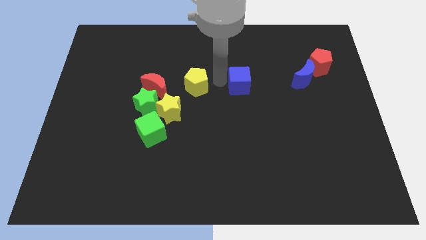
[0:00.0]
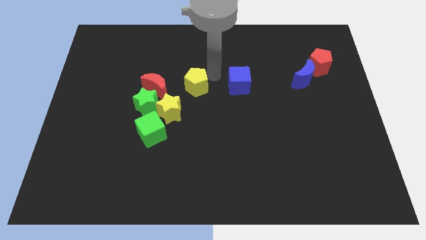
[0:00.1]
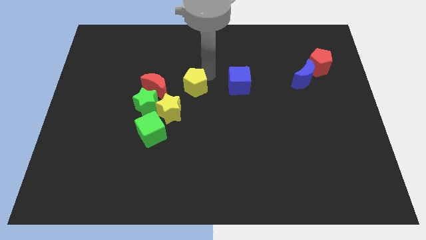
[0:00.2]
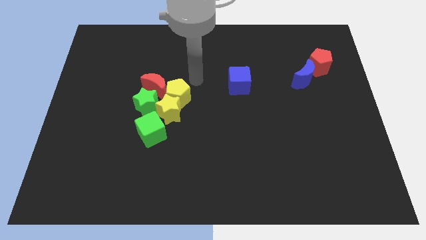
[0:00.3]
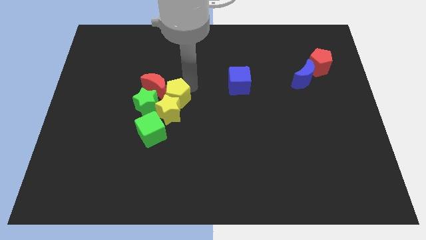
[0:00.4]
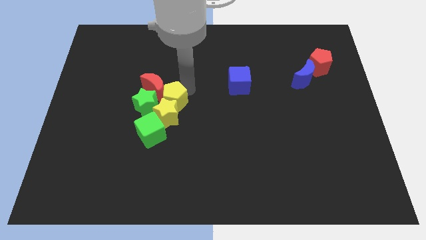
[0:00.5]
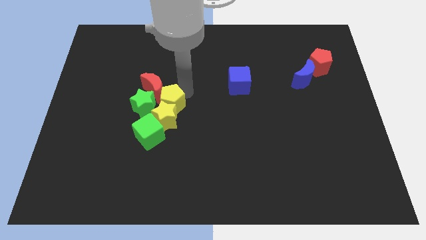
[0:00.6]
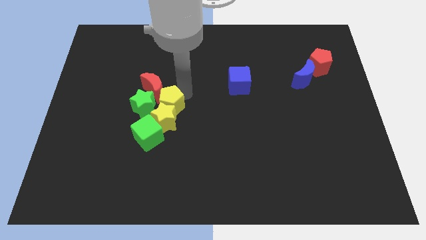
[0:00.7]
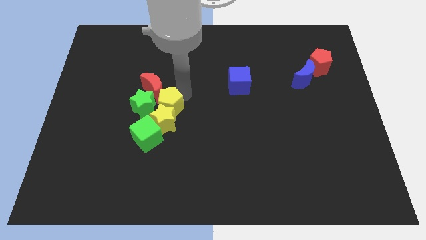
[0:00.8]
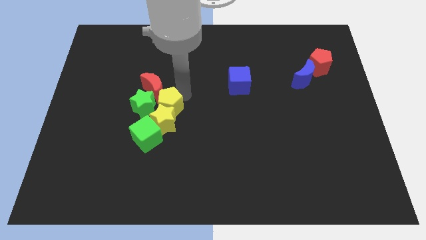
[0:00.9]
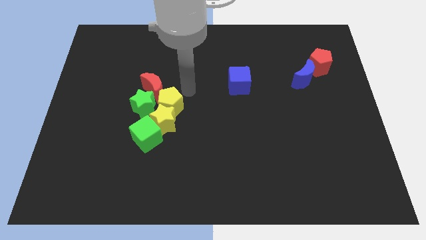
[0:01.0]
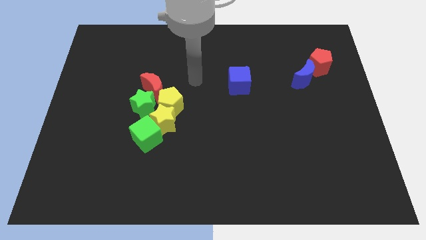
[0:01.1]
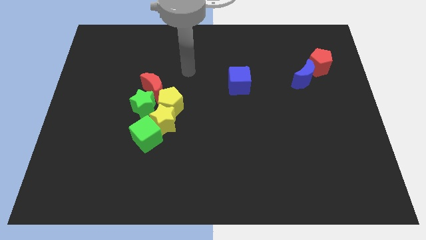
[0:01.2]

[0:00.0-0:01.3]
push the yellow pentagon into the yellow star

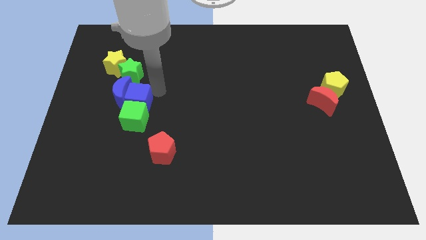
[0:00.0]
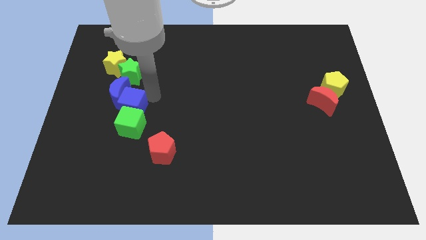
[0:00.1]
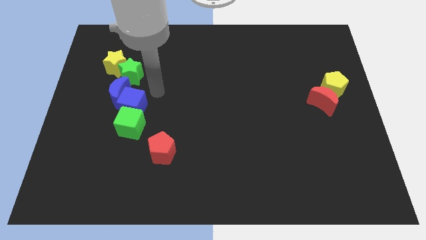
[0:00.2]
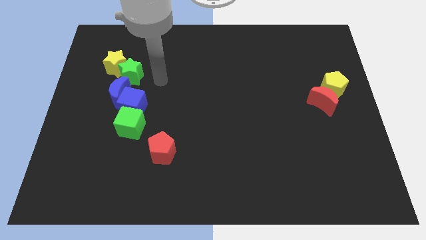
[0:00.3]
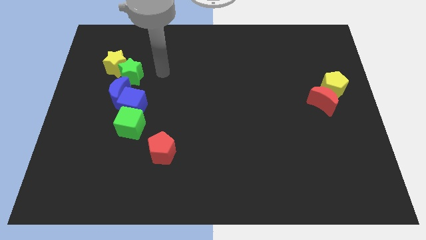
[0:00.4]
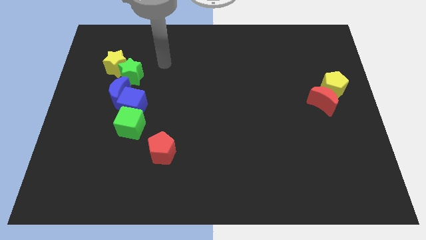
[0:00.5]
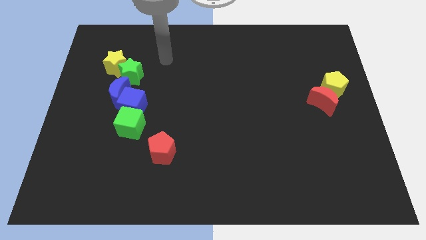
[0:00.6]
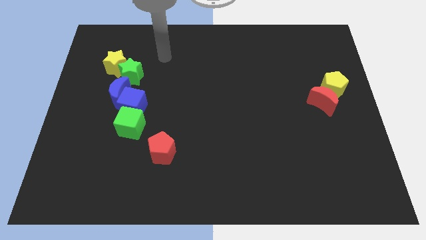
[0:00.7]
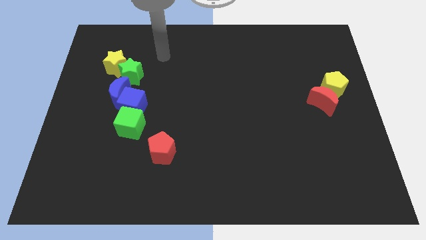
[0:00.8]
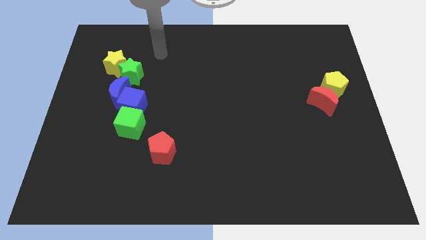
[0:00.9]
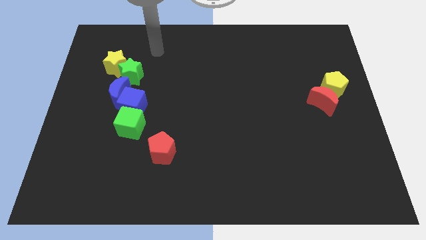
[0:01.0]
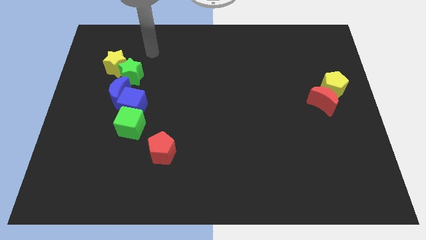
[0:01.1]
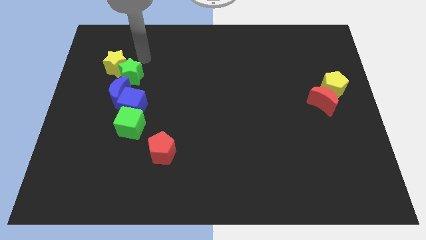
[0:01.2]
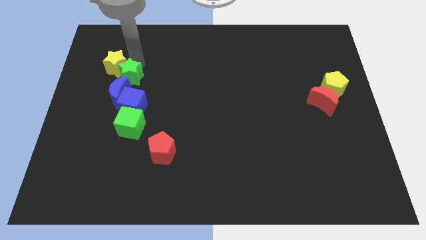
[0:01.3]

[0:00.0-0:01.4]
drag the pointer to the top of the green star

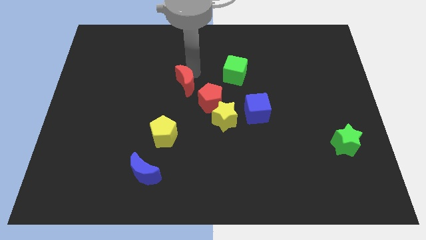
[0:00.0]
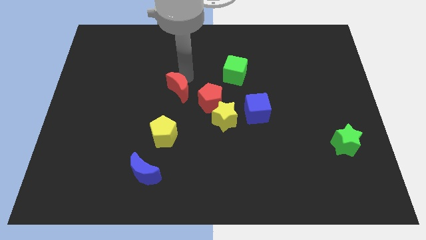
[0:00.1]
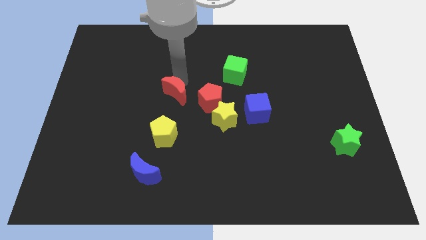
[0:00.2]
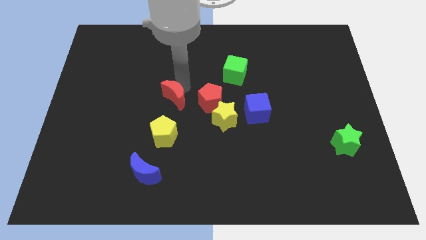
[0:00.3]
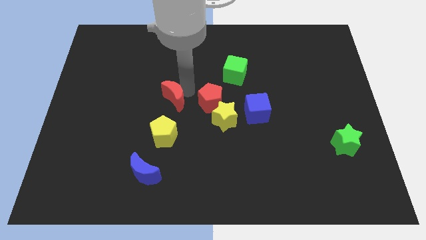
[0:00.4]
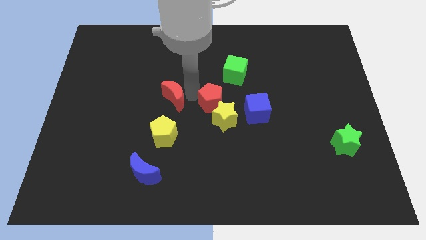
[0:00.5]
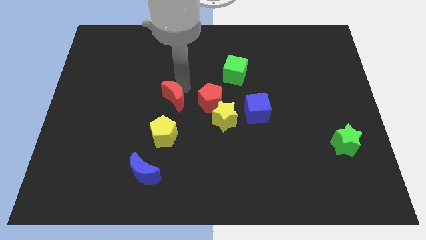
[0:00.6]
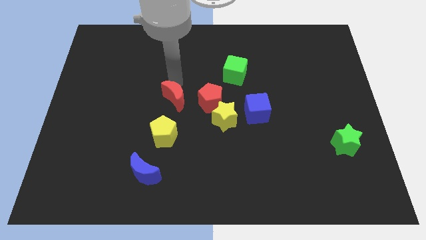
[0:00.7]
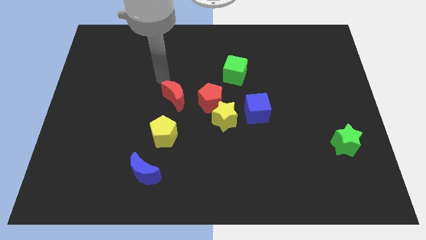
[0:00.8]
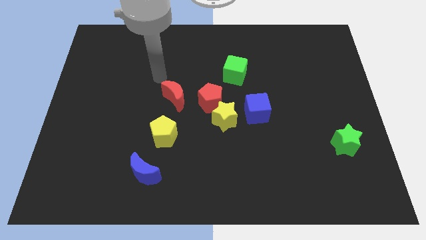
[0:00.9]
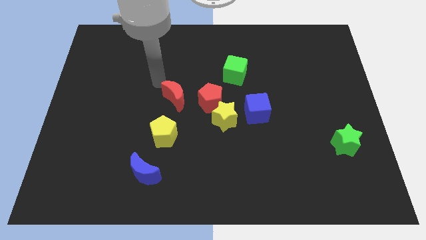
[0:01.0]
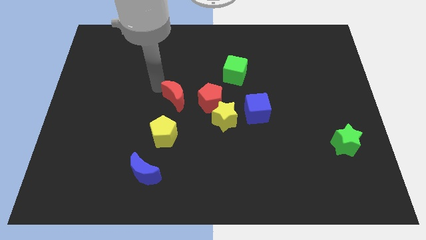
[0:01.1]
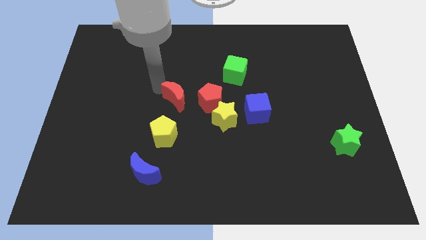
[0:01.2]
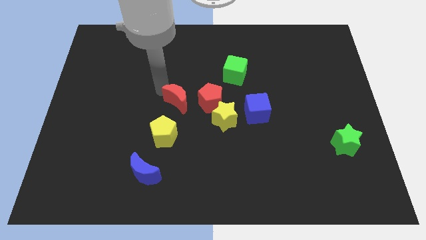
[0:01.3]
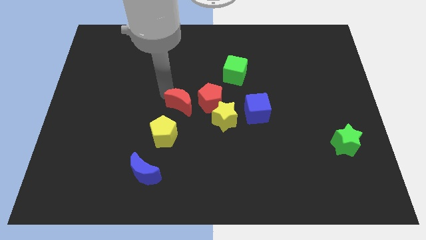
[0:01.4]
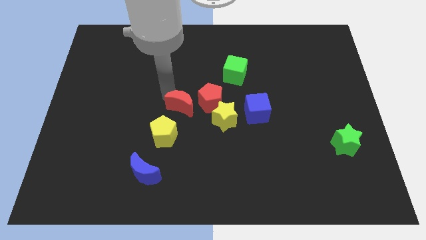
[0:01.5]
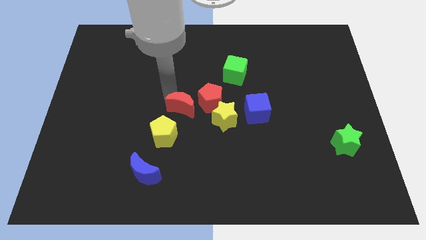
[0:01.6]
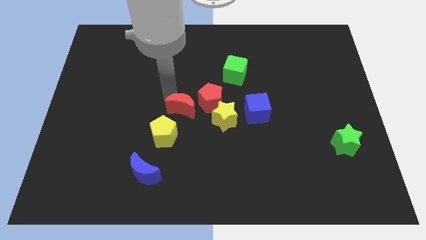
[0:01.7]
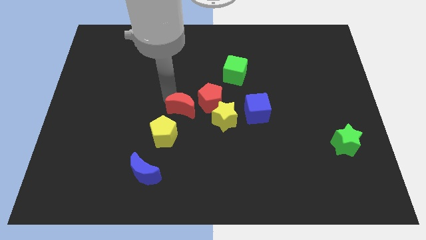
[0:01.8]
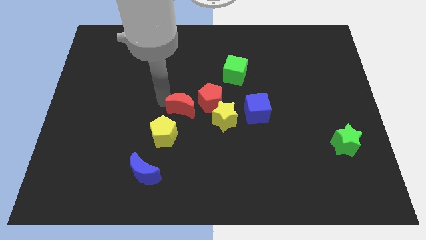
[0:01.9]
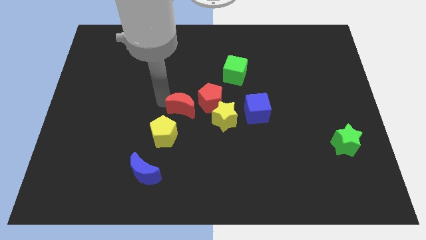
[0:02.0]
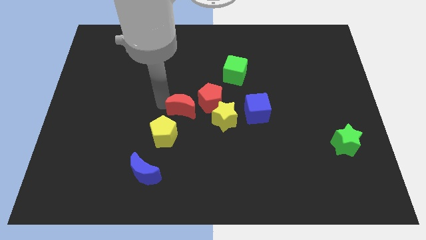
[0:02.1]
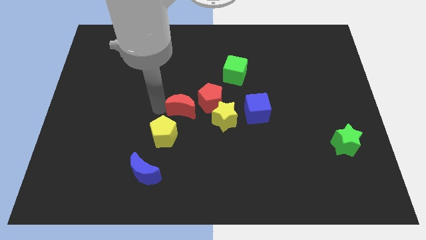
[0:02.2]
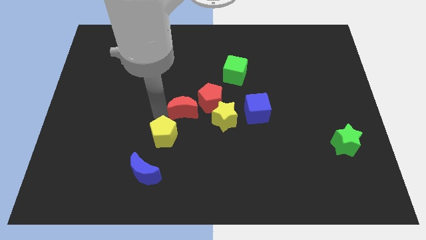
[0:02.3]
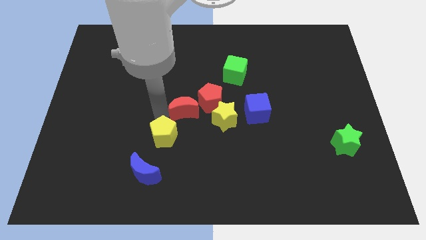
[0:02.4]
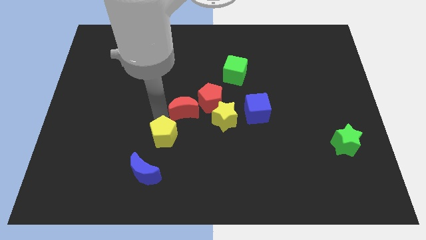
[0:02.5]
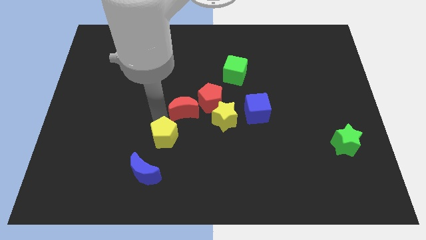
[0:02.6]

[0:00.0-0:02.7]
move the red moon slightly to the left of red pentagon

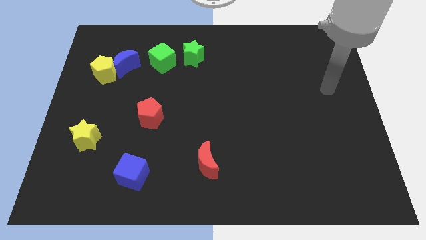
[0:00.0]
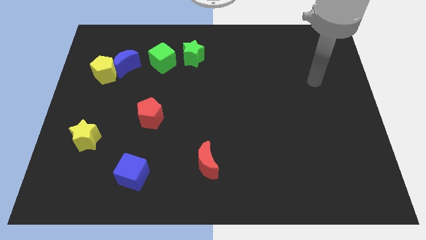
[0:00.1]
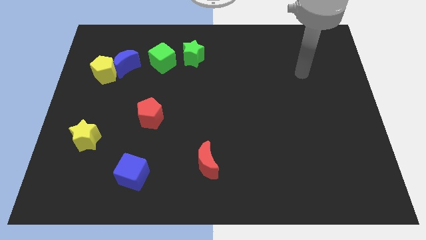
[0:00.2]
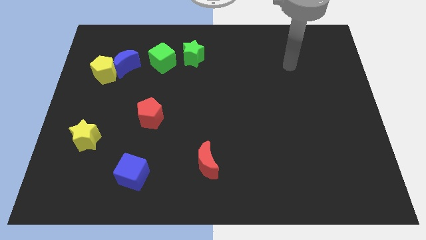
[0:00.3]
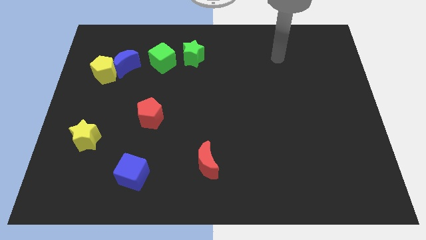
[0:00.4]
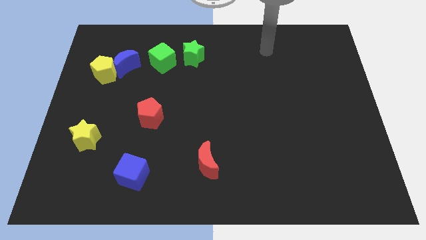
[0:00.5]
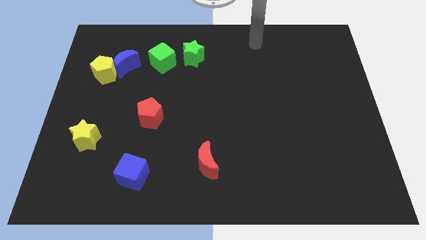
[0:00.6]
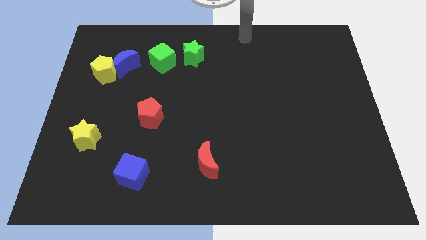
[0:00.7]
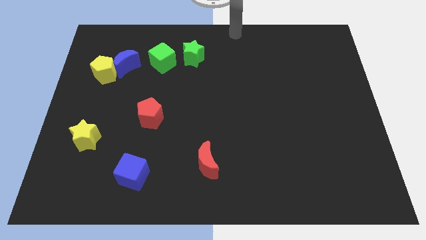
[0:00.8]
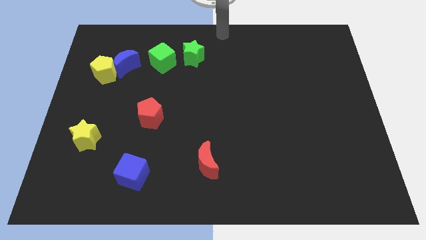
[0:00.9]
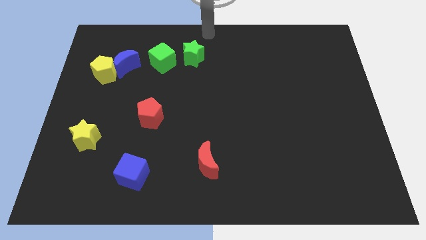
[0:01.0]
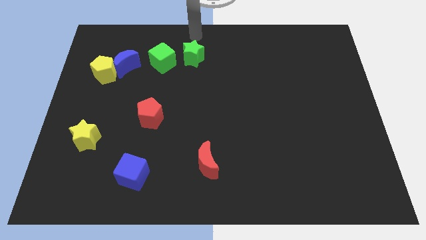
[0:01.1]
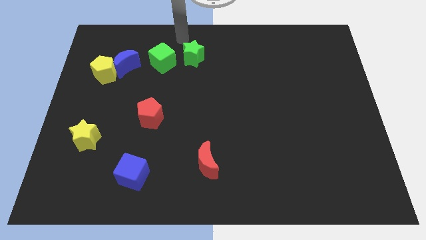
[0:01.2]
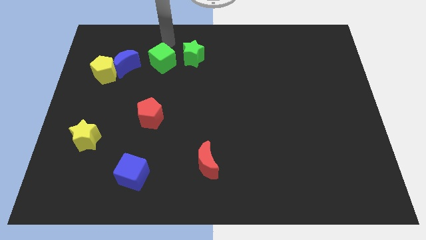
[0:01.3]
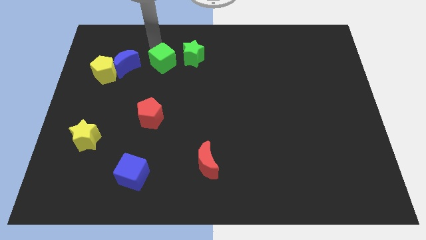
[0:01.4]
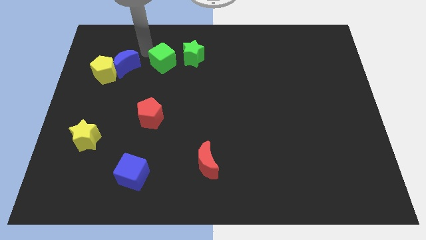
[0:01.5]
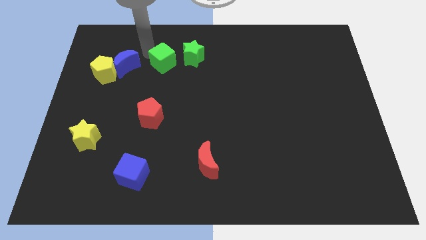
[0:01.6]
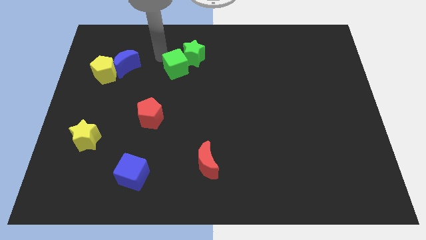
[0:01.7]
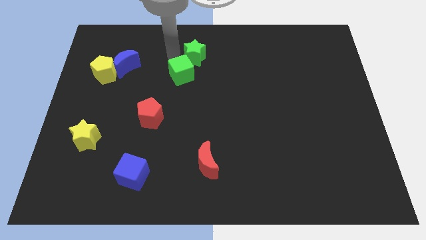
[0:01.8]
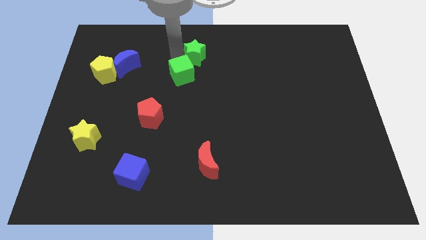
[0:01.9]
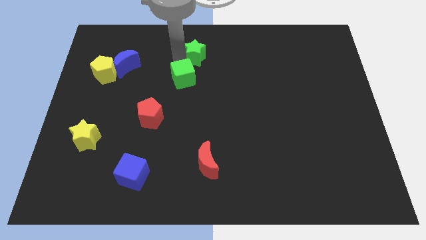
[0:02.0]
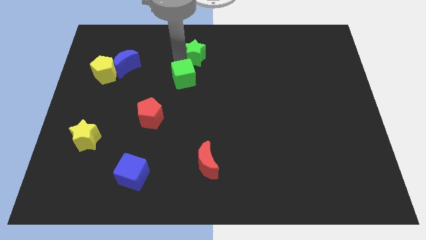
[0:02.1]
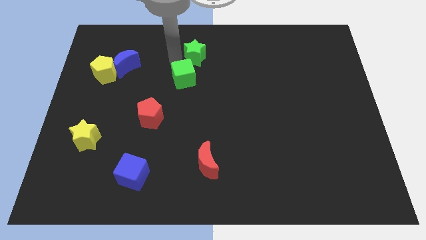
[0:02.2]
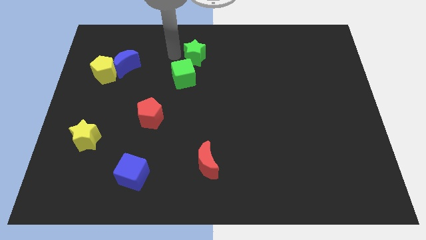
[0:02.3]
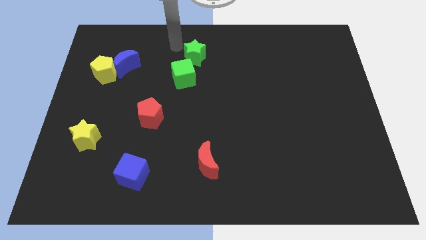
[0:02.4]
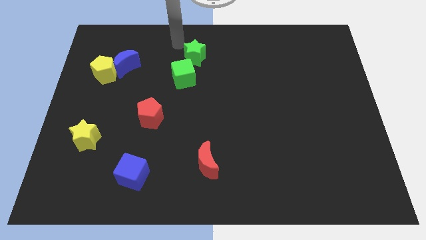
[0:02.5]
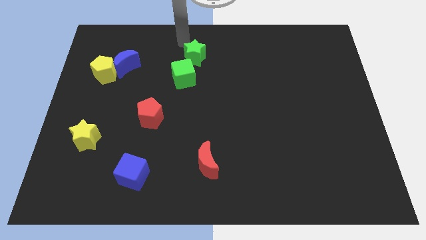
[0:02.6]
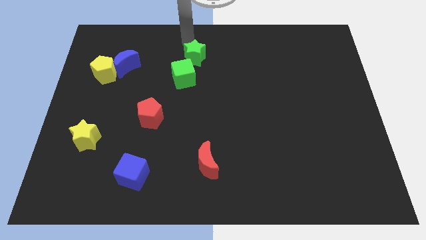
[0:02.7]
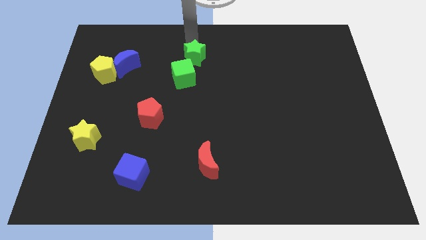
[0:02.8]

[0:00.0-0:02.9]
push the green cube below the green star

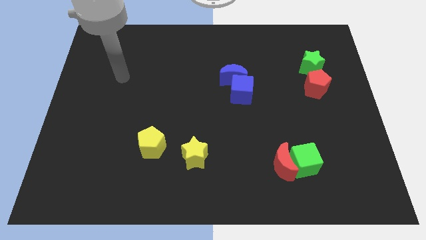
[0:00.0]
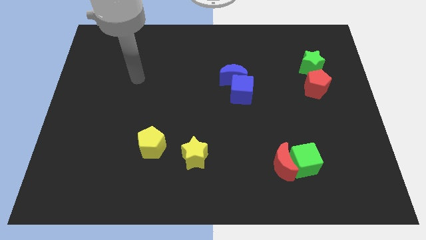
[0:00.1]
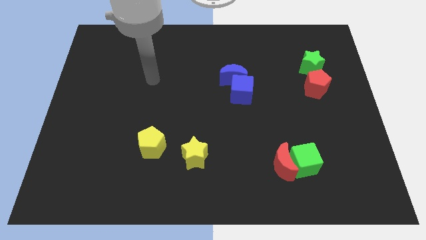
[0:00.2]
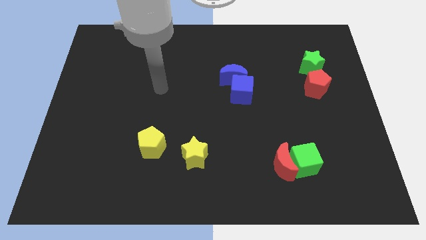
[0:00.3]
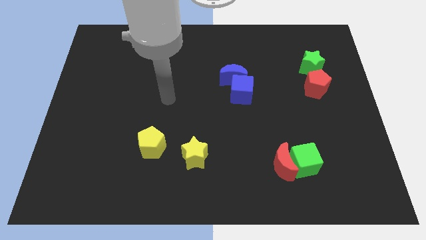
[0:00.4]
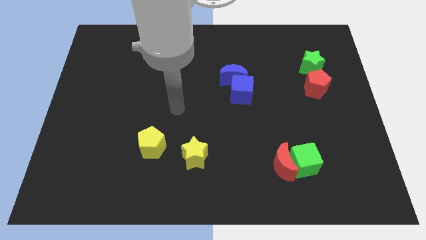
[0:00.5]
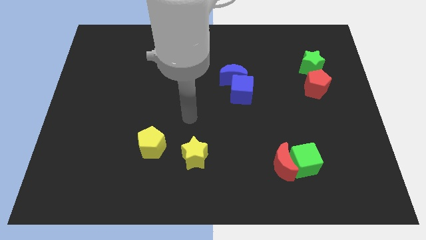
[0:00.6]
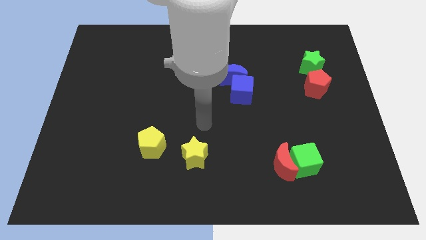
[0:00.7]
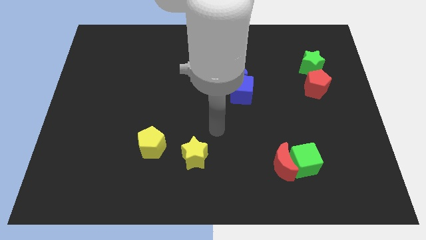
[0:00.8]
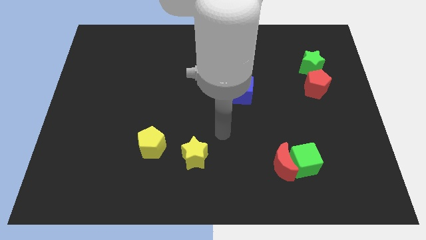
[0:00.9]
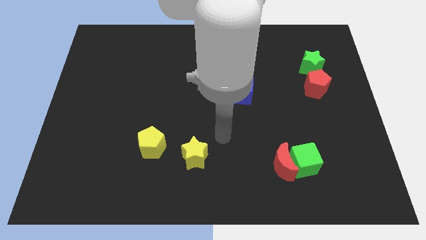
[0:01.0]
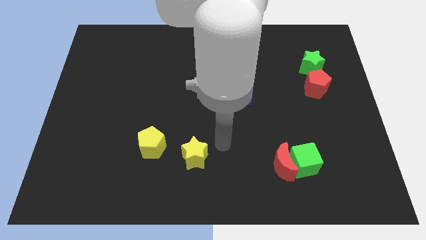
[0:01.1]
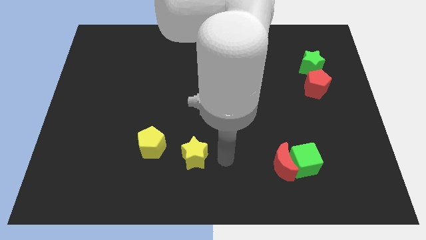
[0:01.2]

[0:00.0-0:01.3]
move your hand to the right side of the yellow star
